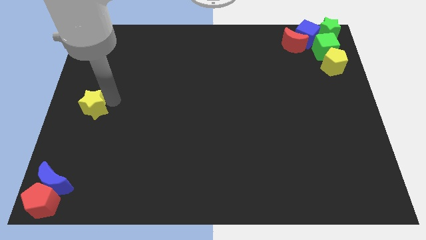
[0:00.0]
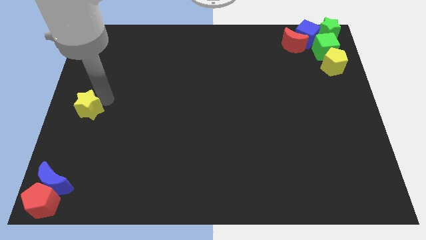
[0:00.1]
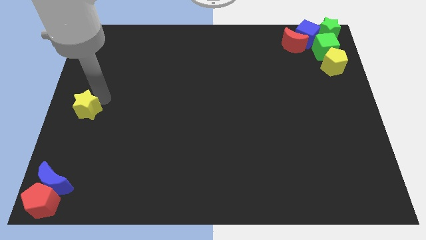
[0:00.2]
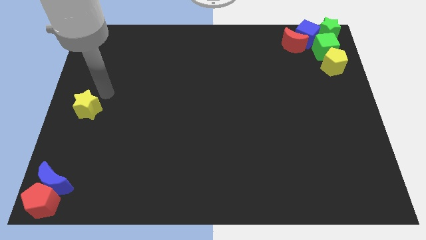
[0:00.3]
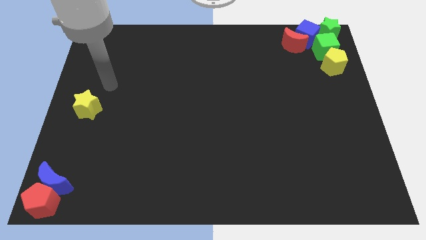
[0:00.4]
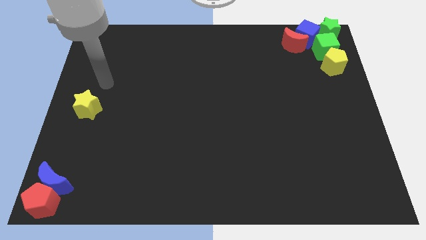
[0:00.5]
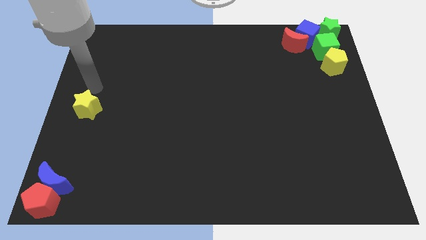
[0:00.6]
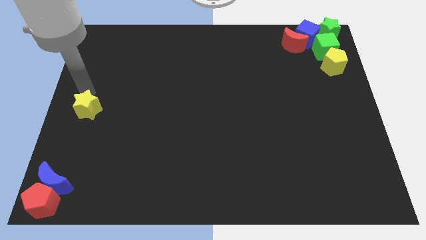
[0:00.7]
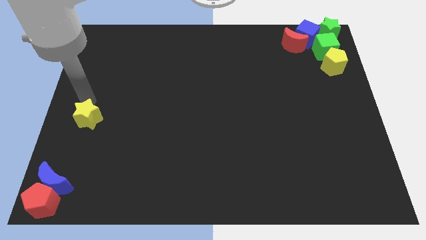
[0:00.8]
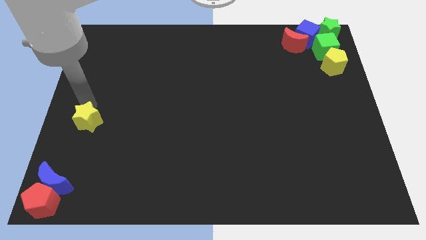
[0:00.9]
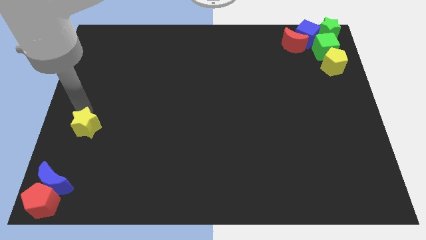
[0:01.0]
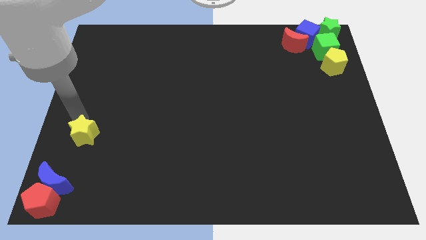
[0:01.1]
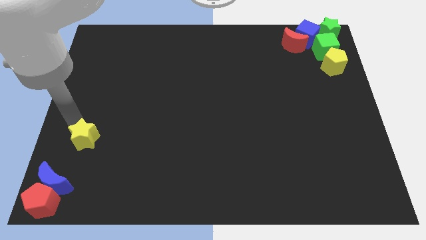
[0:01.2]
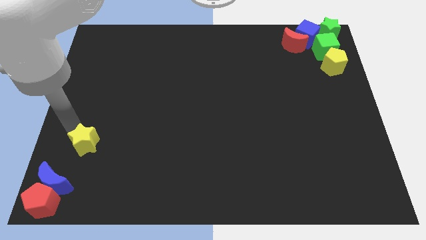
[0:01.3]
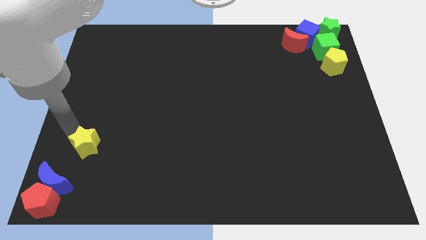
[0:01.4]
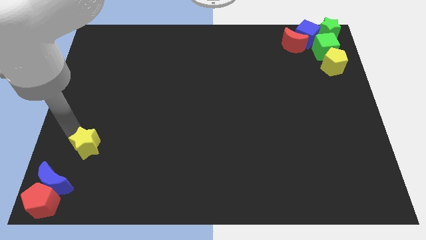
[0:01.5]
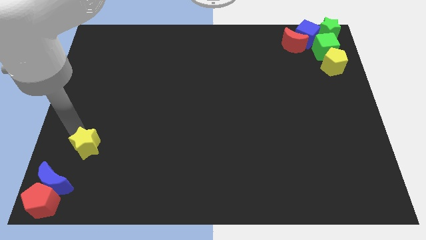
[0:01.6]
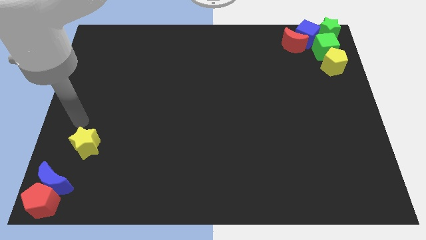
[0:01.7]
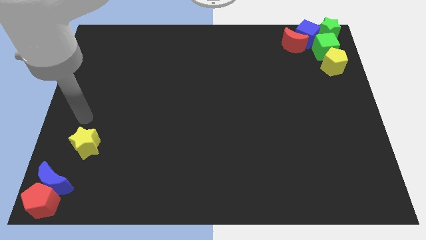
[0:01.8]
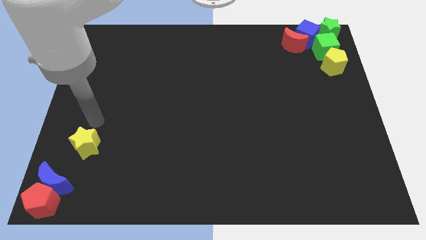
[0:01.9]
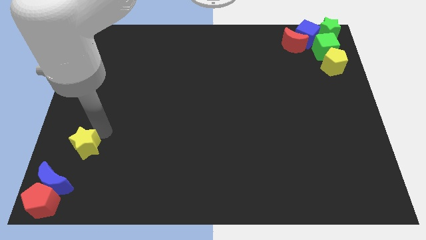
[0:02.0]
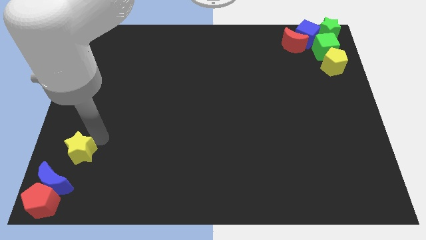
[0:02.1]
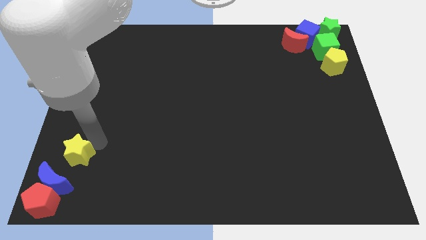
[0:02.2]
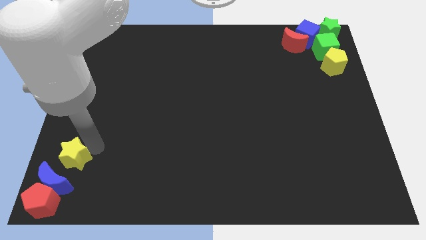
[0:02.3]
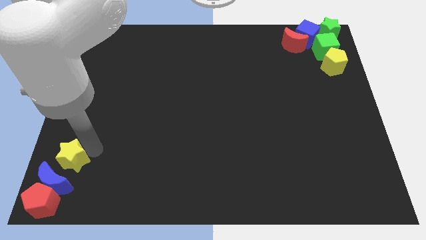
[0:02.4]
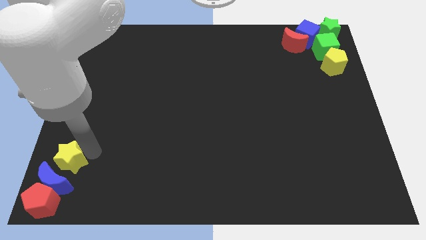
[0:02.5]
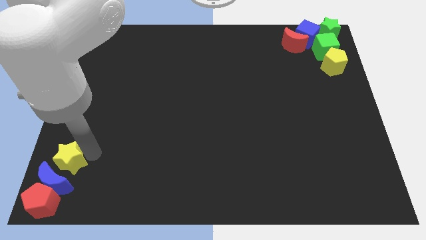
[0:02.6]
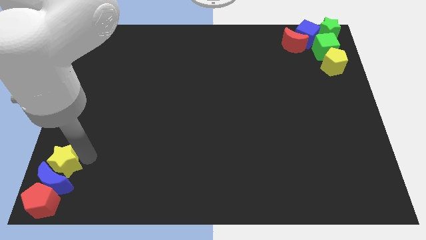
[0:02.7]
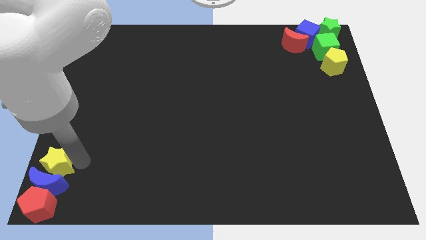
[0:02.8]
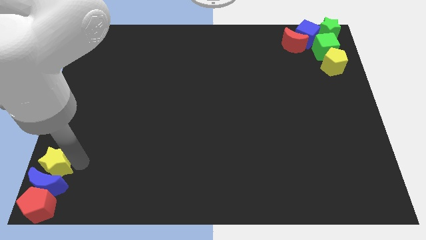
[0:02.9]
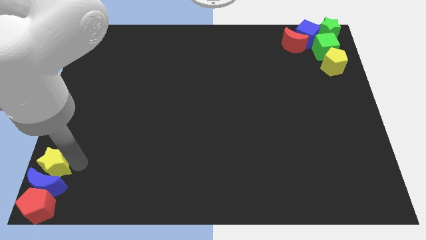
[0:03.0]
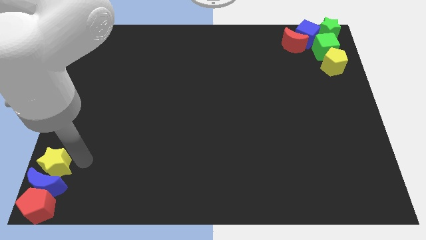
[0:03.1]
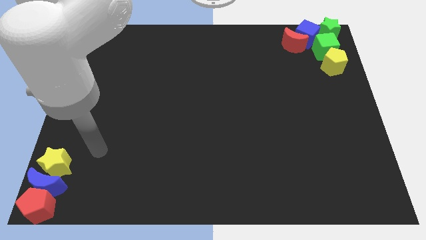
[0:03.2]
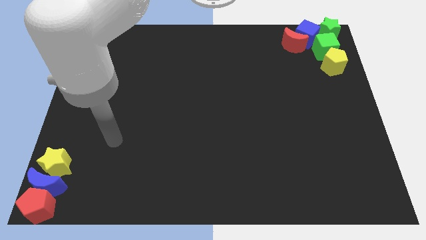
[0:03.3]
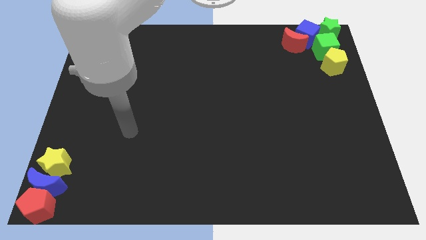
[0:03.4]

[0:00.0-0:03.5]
push yellow star near blue crescent

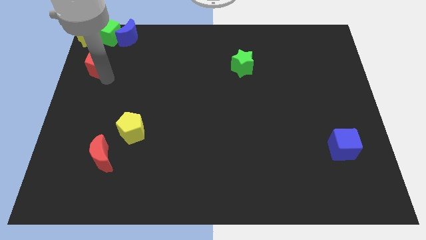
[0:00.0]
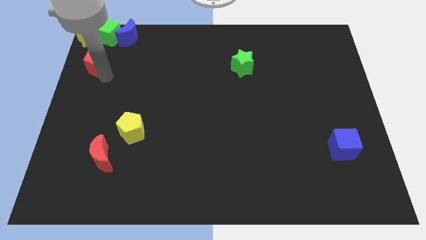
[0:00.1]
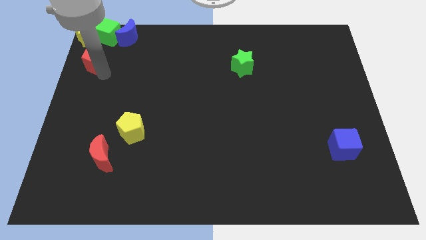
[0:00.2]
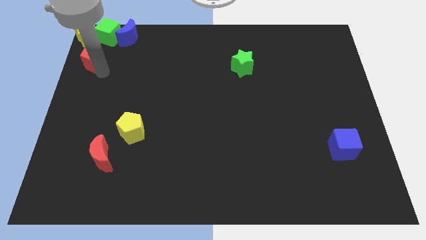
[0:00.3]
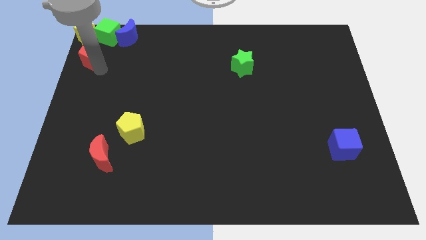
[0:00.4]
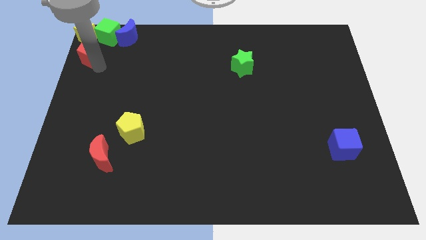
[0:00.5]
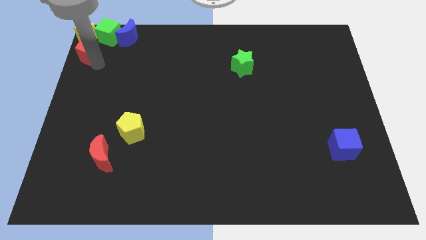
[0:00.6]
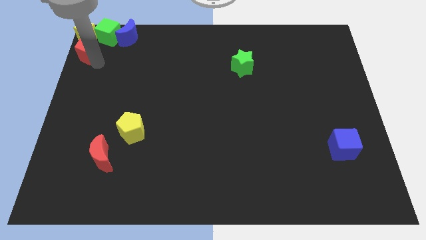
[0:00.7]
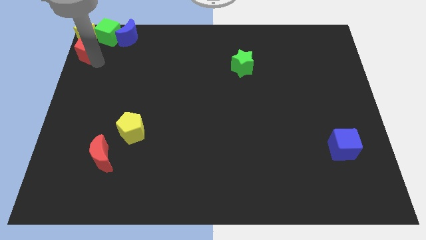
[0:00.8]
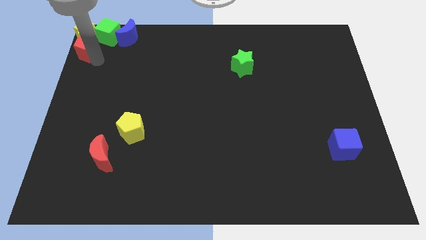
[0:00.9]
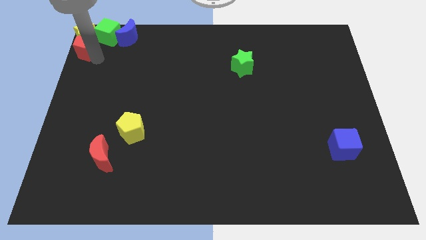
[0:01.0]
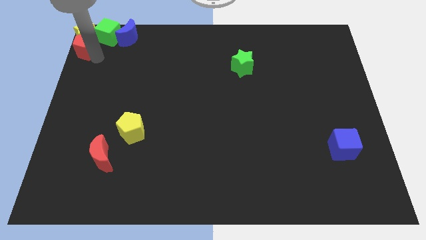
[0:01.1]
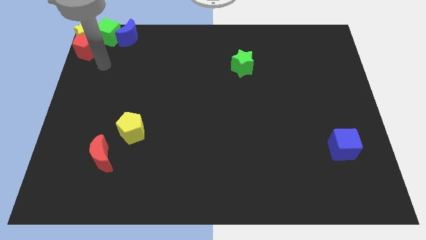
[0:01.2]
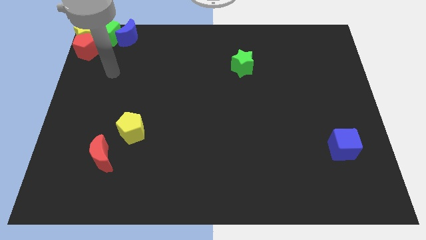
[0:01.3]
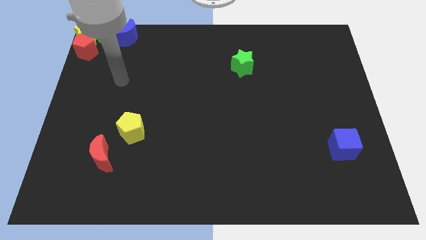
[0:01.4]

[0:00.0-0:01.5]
place the red pentagon to the bottom side of the yellow star

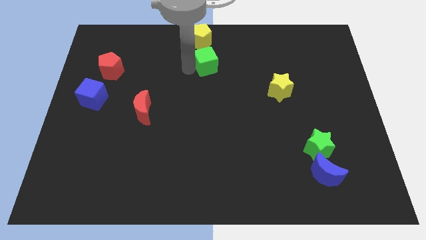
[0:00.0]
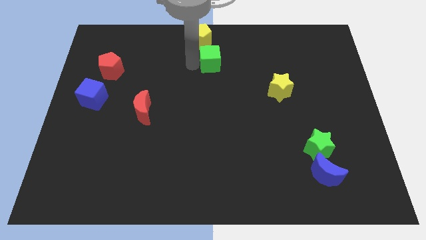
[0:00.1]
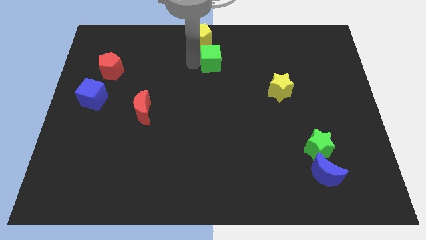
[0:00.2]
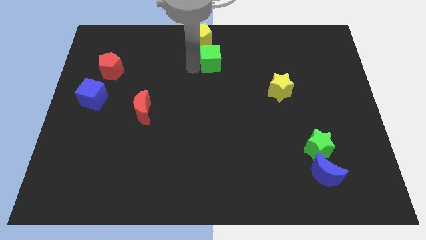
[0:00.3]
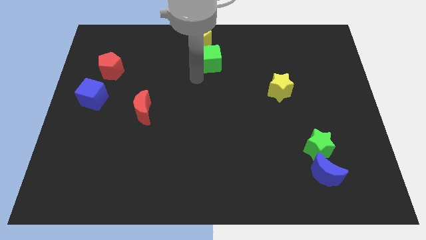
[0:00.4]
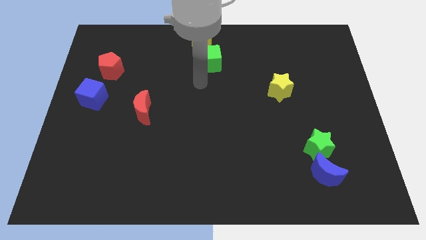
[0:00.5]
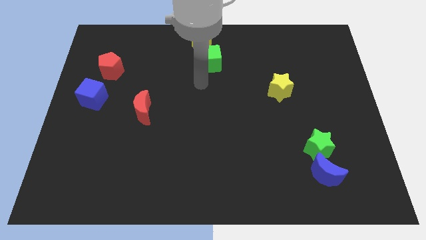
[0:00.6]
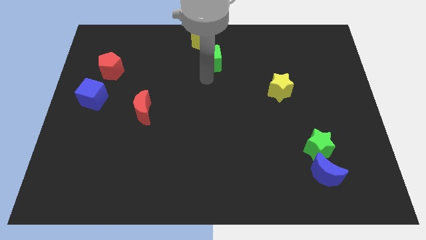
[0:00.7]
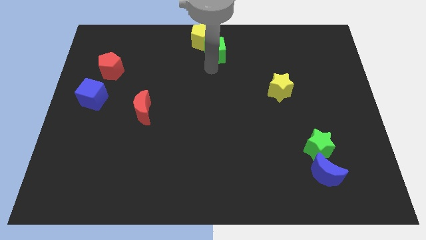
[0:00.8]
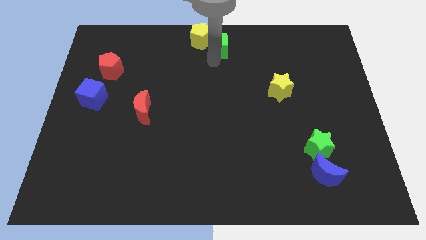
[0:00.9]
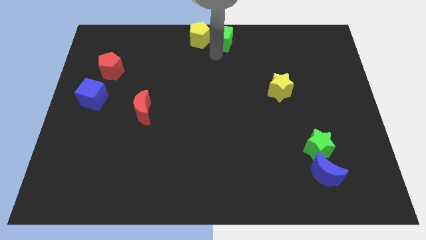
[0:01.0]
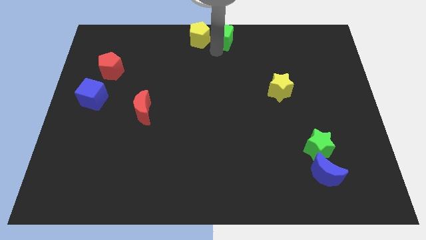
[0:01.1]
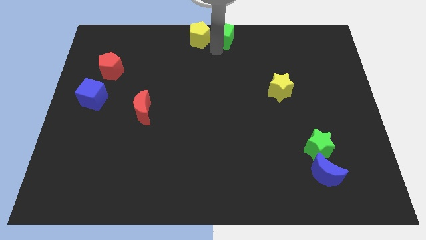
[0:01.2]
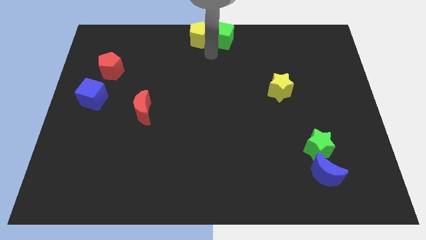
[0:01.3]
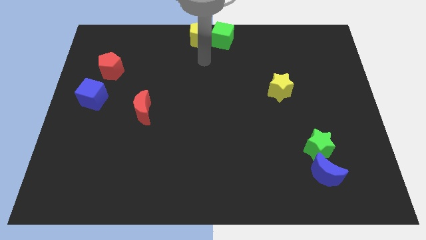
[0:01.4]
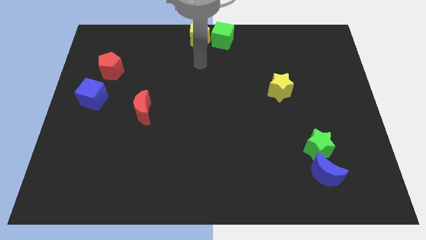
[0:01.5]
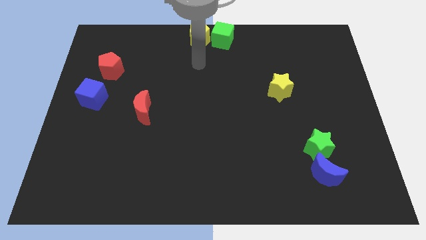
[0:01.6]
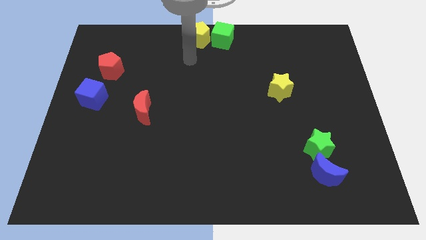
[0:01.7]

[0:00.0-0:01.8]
push the green cube to the right of the yellow pentagon

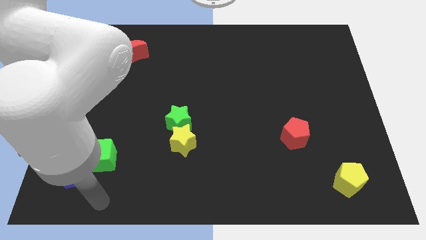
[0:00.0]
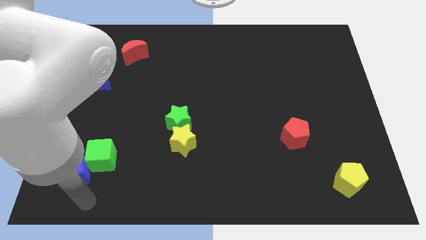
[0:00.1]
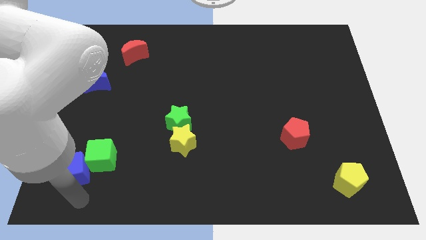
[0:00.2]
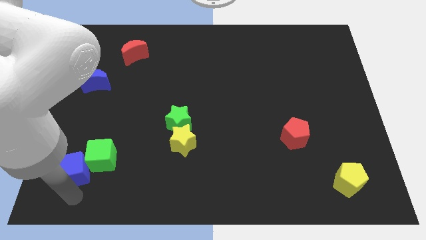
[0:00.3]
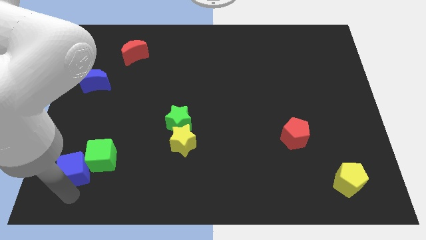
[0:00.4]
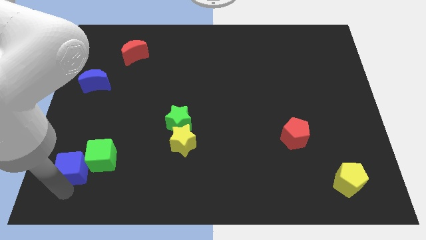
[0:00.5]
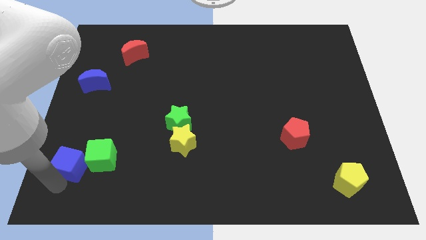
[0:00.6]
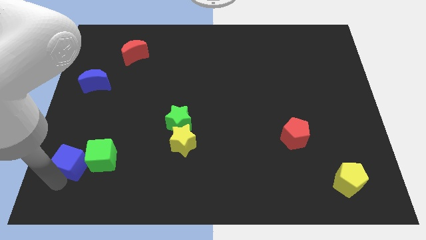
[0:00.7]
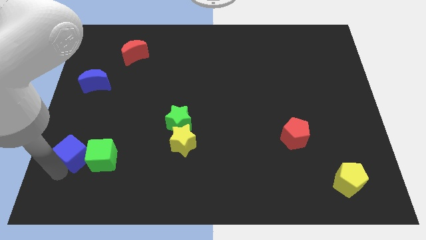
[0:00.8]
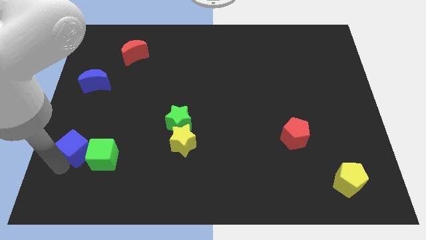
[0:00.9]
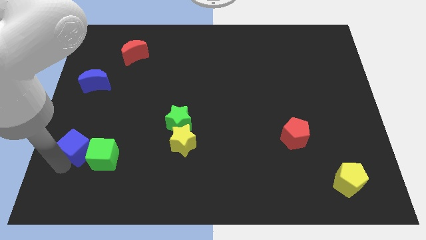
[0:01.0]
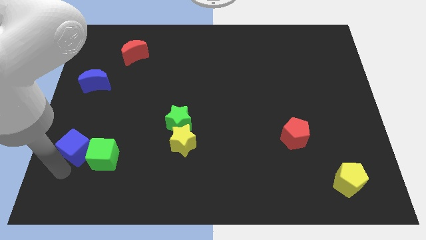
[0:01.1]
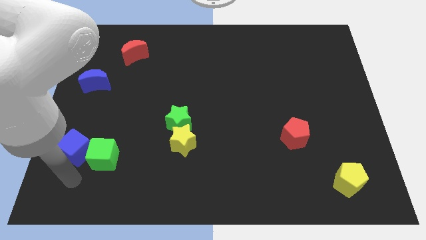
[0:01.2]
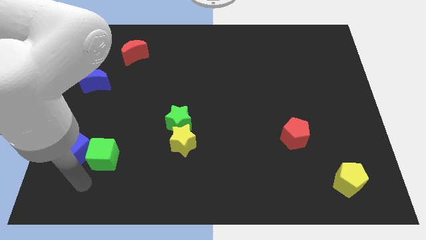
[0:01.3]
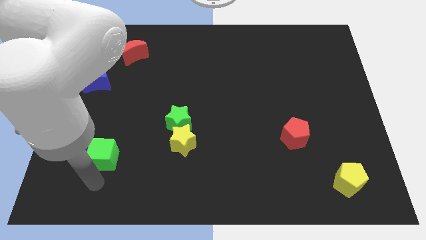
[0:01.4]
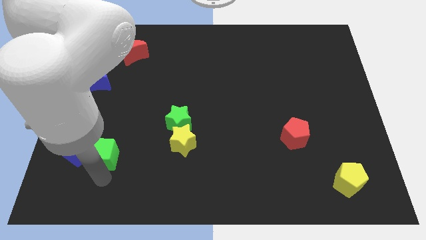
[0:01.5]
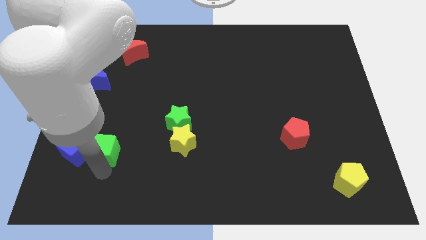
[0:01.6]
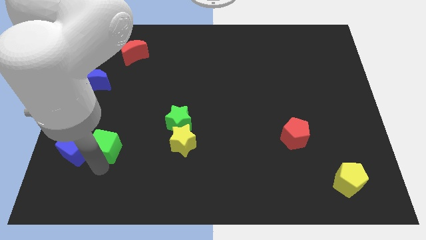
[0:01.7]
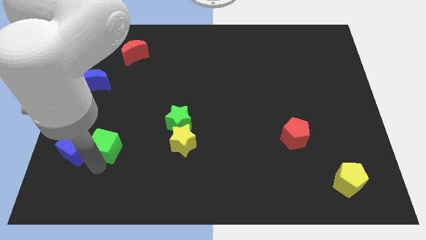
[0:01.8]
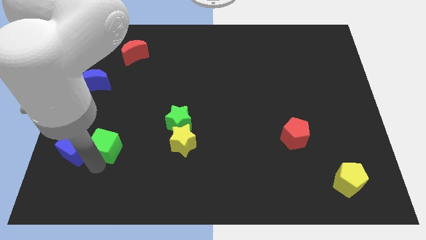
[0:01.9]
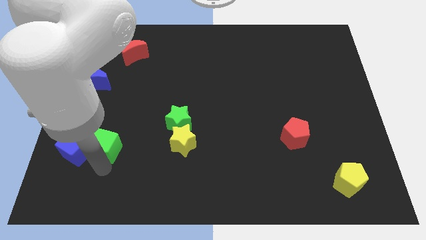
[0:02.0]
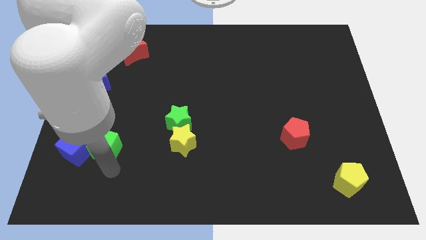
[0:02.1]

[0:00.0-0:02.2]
move the arm vertically below the green cube

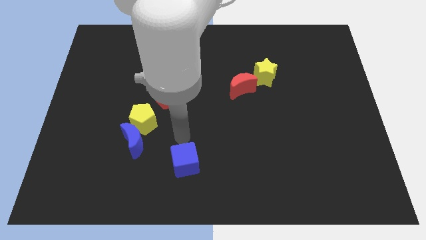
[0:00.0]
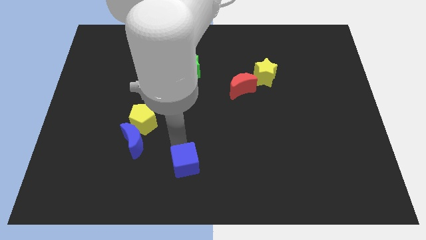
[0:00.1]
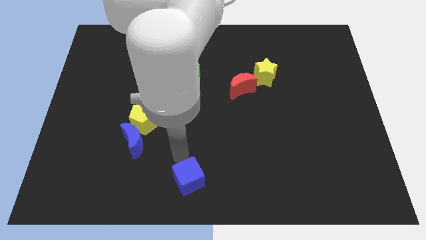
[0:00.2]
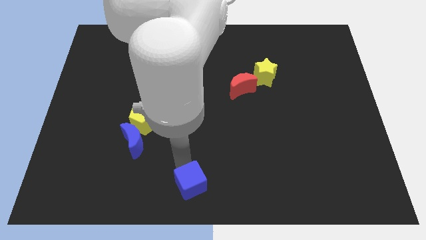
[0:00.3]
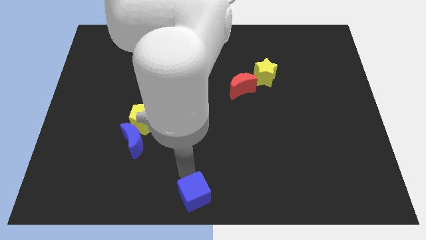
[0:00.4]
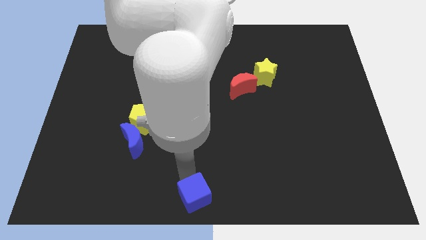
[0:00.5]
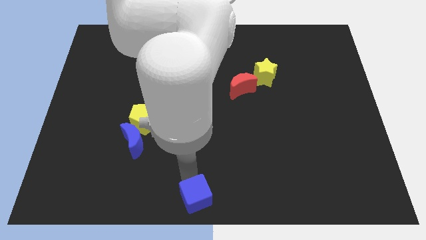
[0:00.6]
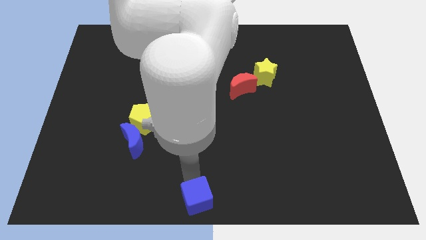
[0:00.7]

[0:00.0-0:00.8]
slightly move the blue cube to the bottom middle of the board
